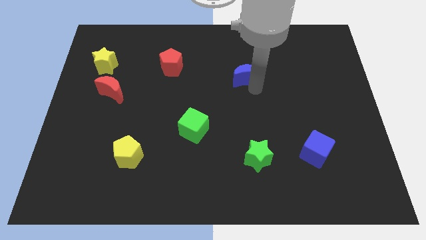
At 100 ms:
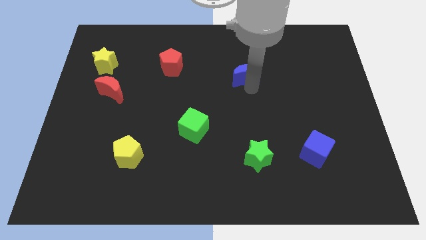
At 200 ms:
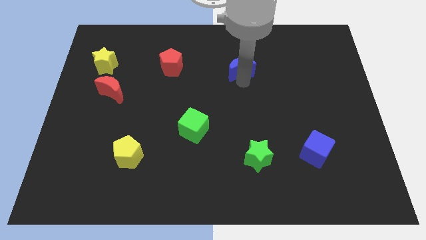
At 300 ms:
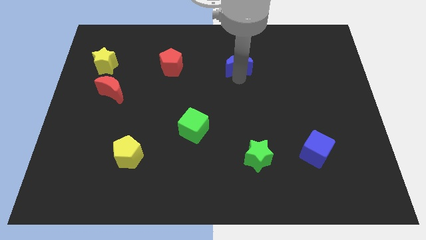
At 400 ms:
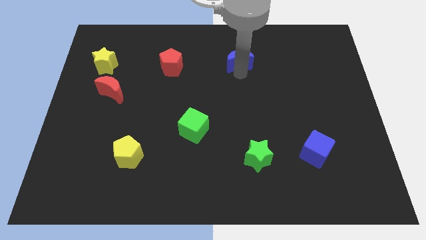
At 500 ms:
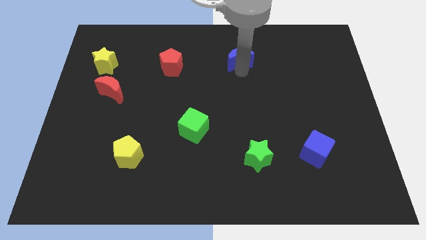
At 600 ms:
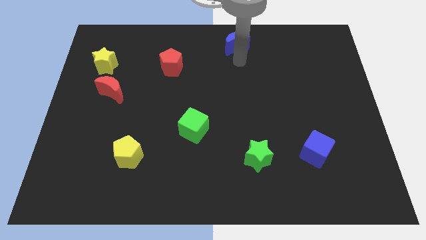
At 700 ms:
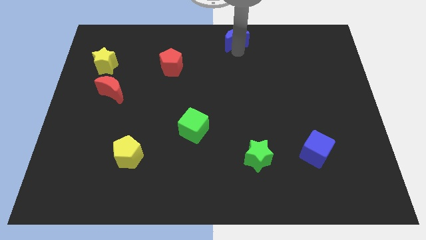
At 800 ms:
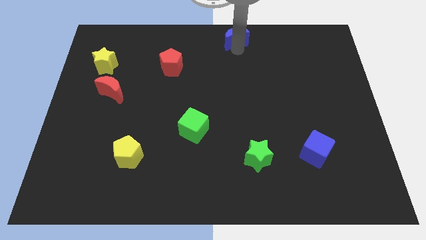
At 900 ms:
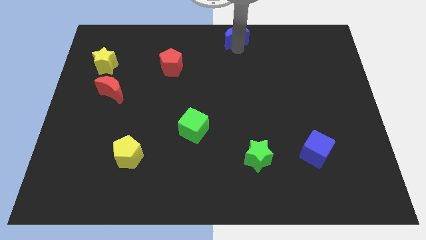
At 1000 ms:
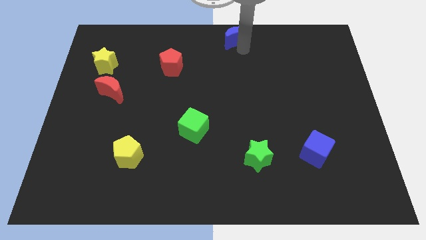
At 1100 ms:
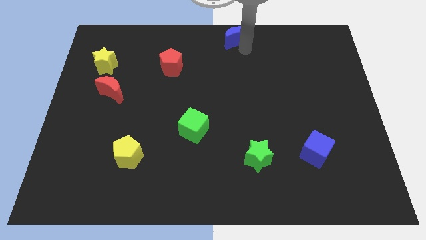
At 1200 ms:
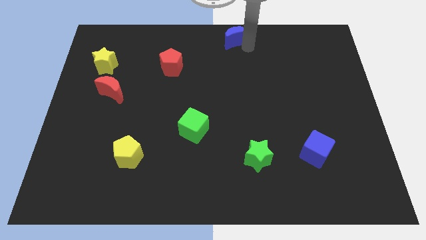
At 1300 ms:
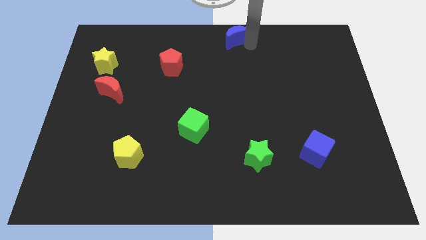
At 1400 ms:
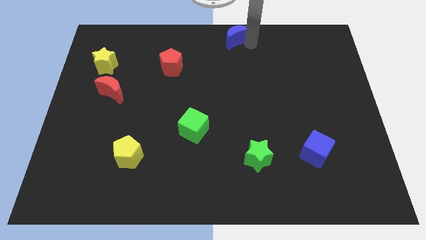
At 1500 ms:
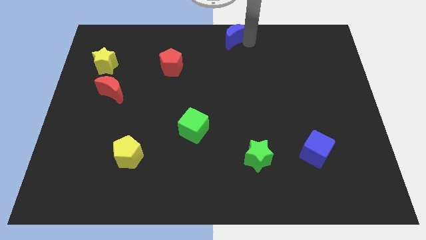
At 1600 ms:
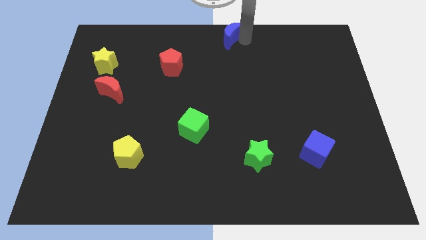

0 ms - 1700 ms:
push the blue moon to the top side of the table

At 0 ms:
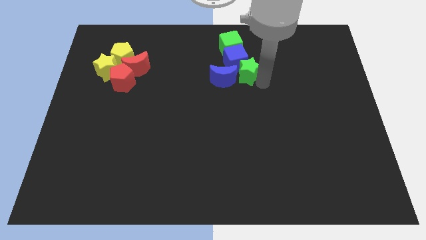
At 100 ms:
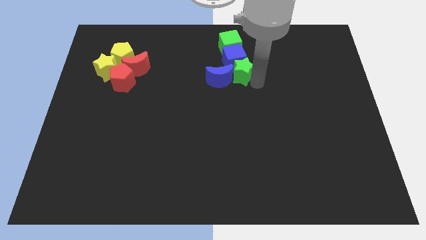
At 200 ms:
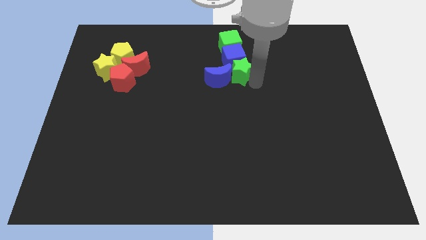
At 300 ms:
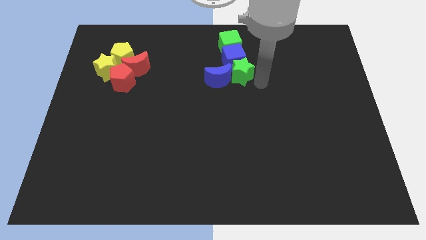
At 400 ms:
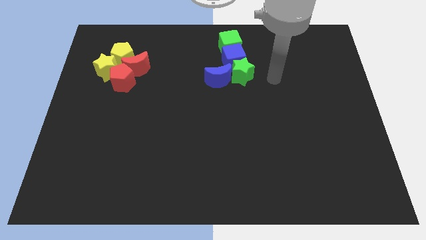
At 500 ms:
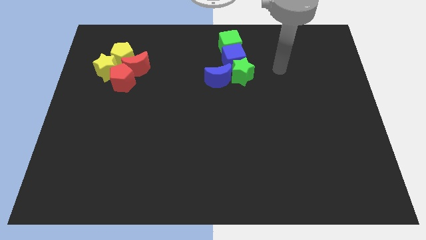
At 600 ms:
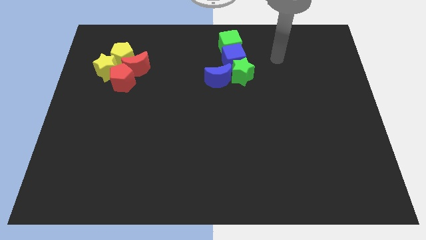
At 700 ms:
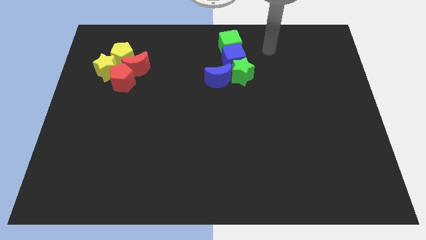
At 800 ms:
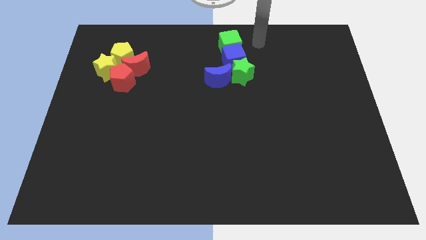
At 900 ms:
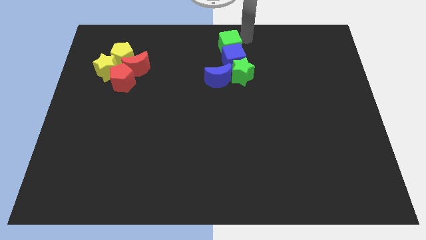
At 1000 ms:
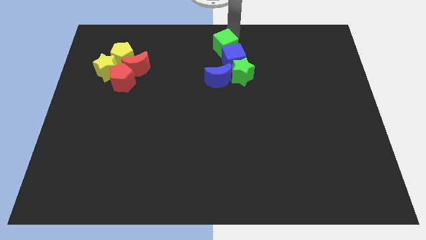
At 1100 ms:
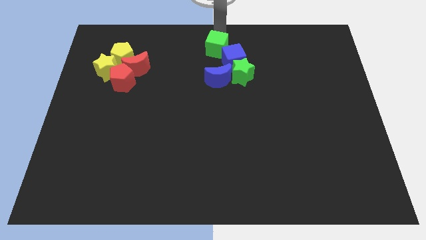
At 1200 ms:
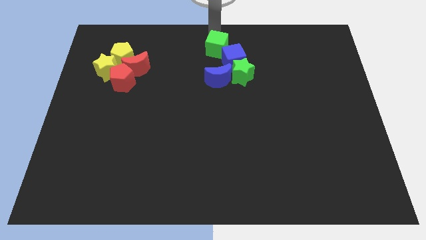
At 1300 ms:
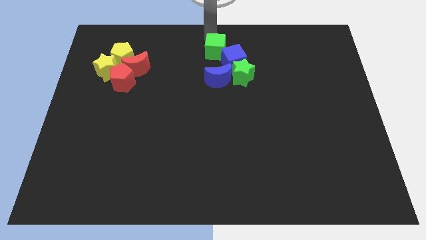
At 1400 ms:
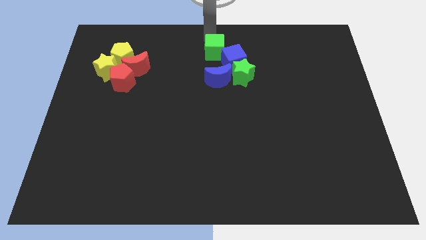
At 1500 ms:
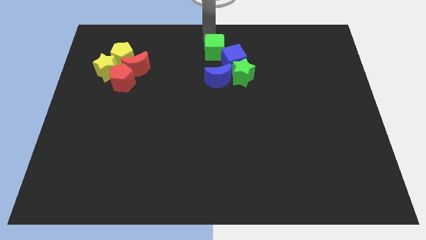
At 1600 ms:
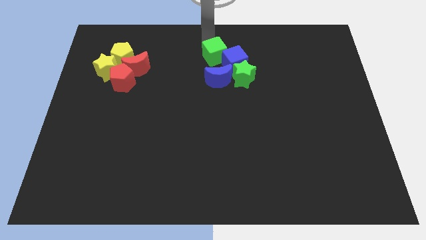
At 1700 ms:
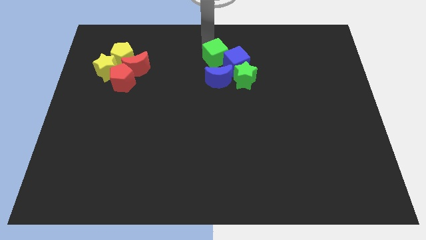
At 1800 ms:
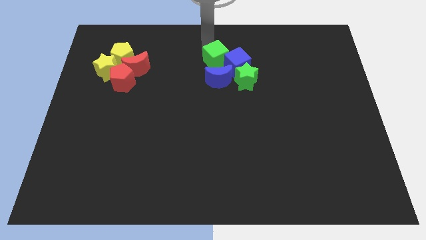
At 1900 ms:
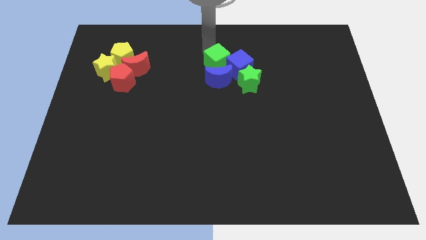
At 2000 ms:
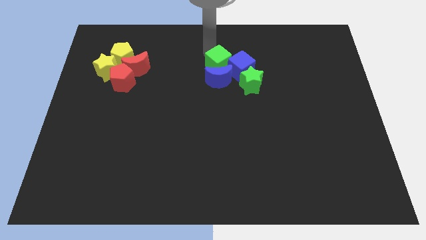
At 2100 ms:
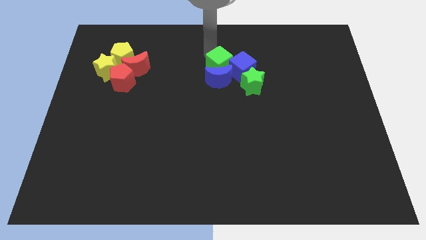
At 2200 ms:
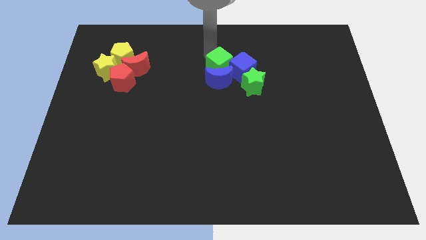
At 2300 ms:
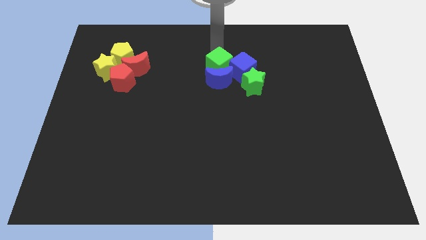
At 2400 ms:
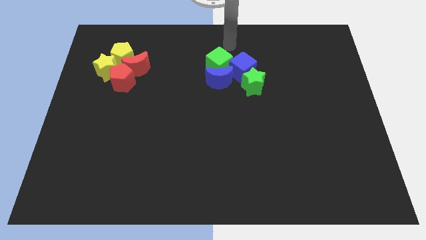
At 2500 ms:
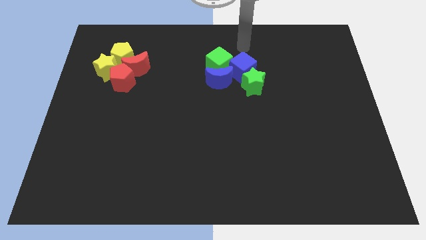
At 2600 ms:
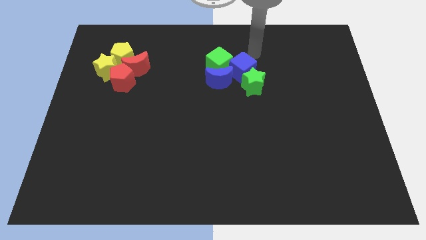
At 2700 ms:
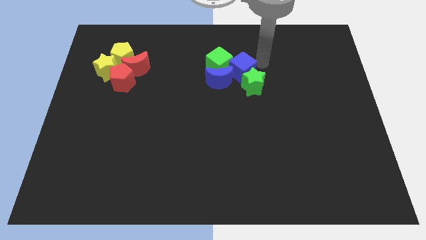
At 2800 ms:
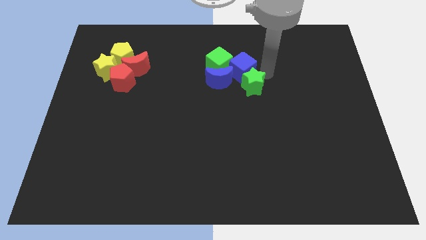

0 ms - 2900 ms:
push the green cube into the blue moon

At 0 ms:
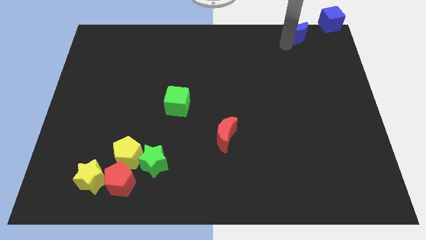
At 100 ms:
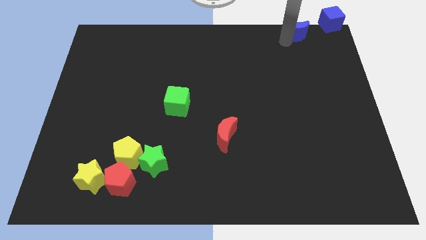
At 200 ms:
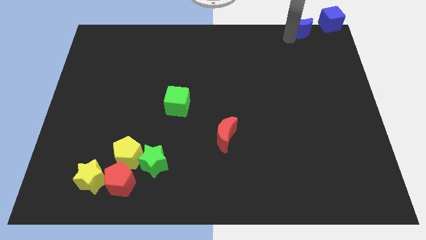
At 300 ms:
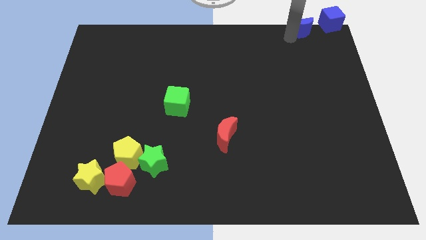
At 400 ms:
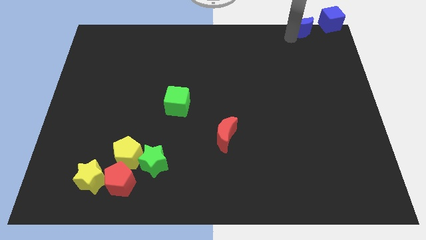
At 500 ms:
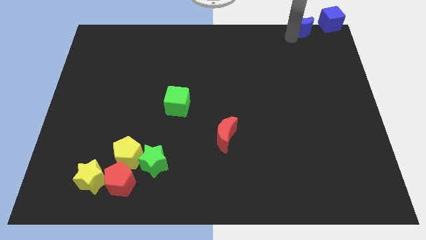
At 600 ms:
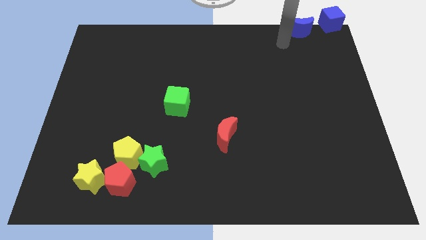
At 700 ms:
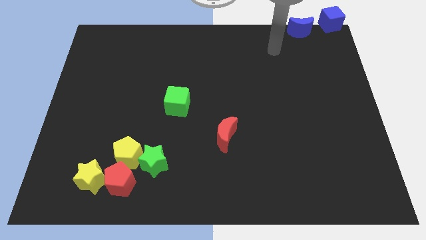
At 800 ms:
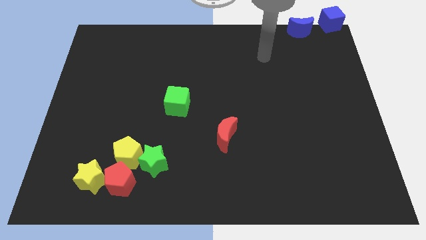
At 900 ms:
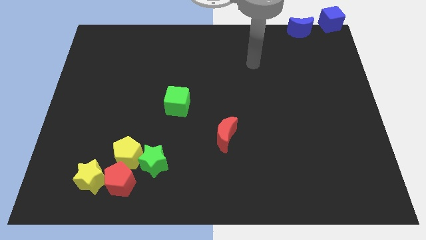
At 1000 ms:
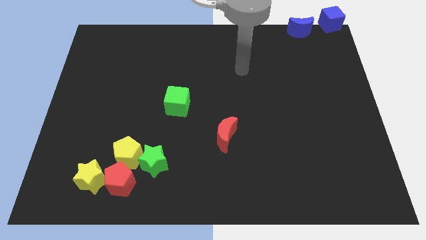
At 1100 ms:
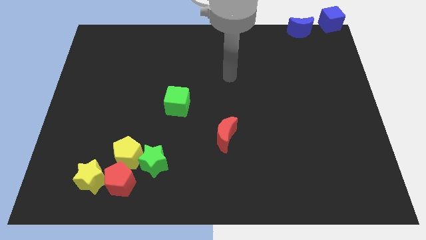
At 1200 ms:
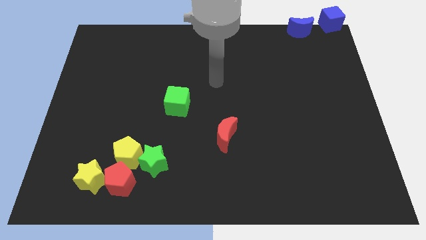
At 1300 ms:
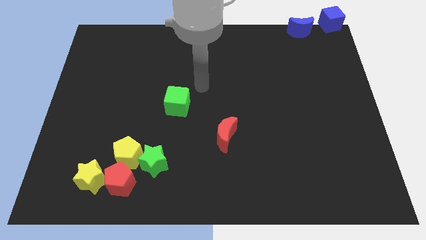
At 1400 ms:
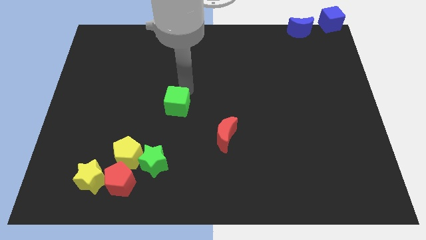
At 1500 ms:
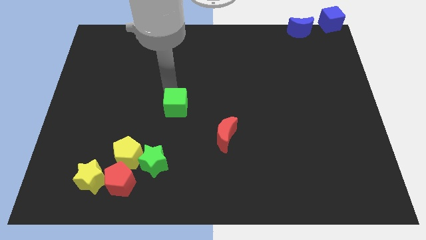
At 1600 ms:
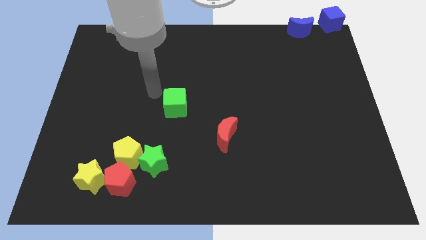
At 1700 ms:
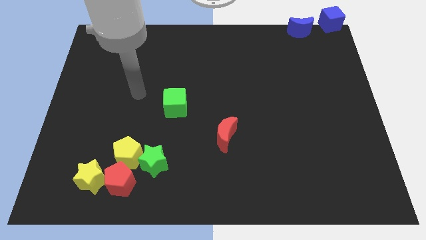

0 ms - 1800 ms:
push the blue crescent close to the blue cube

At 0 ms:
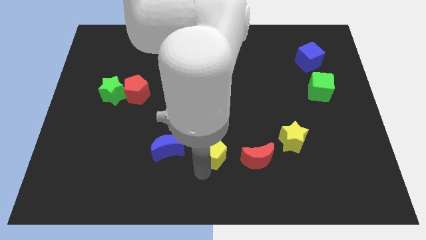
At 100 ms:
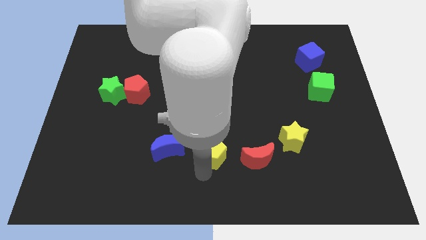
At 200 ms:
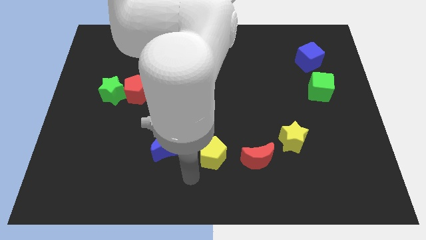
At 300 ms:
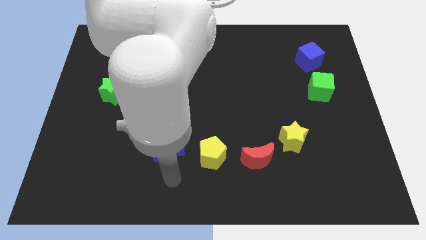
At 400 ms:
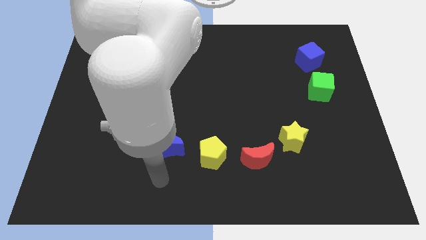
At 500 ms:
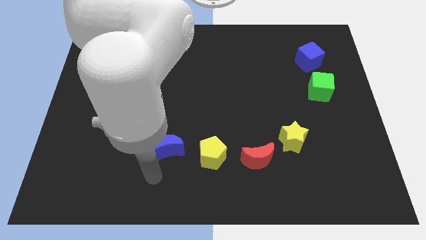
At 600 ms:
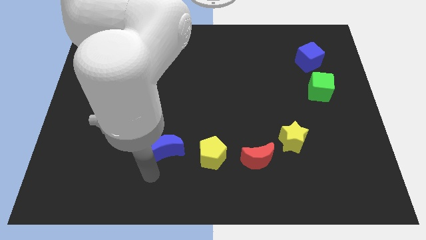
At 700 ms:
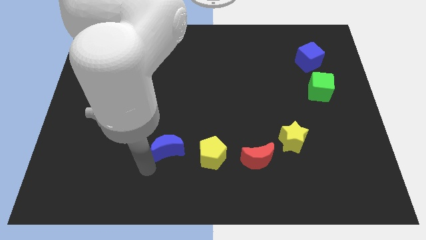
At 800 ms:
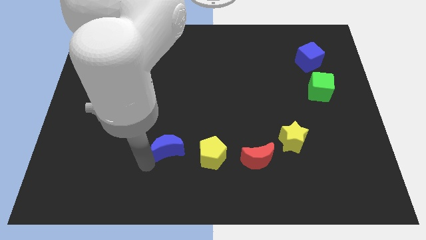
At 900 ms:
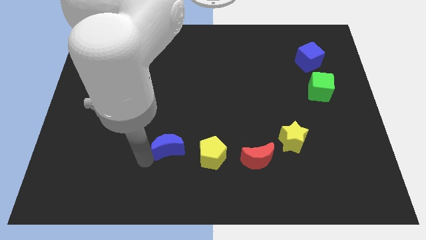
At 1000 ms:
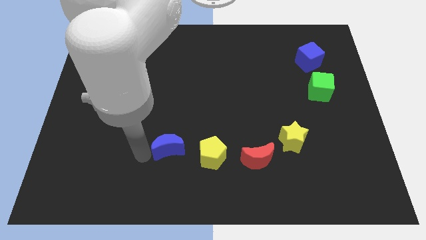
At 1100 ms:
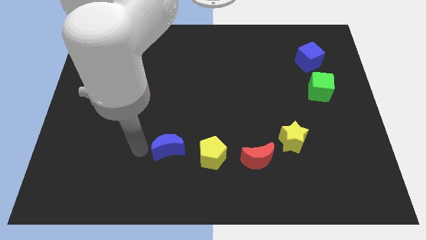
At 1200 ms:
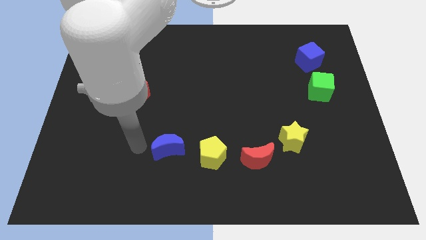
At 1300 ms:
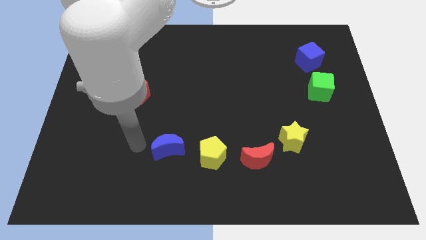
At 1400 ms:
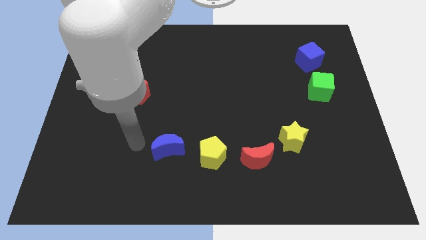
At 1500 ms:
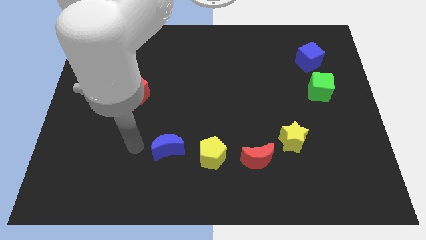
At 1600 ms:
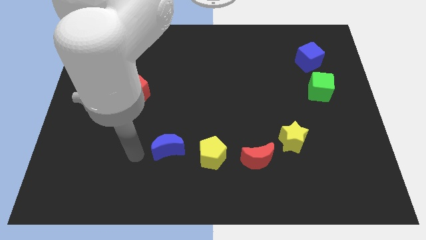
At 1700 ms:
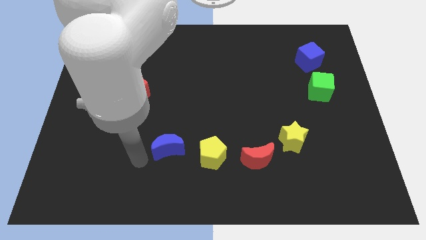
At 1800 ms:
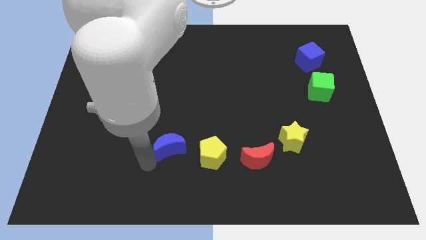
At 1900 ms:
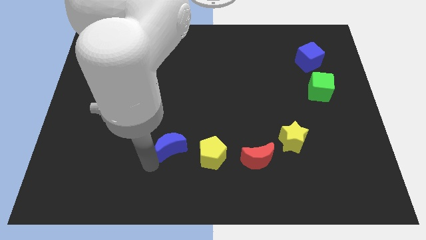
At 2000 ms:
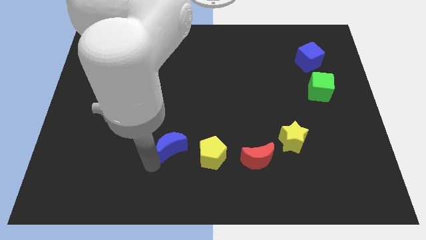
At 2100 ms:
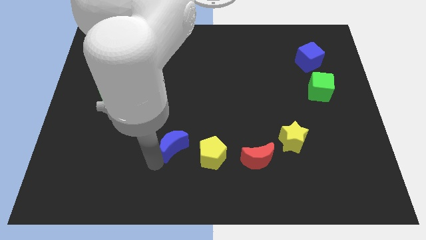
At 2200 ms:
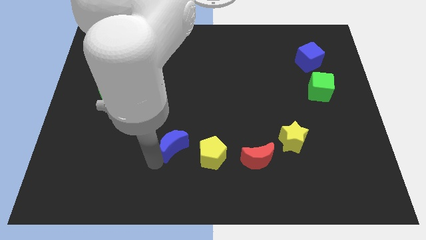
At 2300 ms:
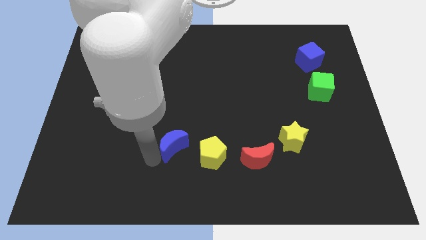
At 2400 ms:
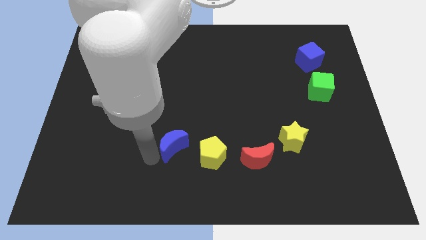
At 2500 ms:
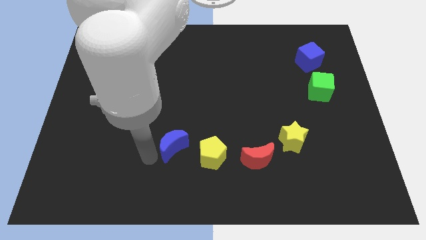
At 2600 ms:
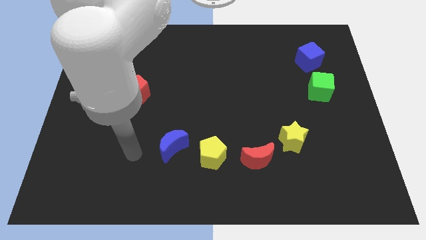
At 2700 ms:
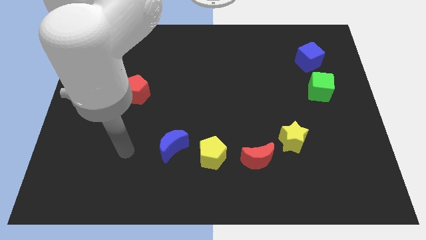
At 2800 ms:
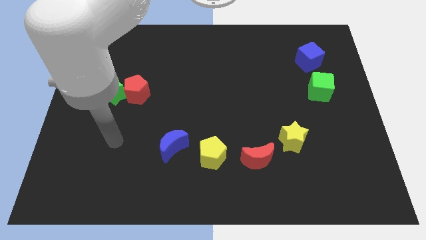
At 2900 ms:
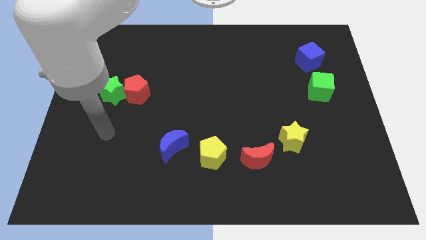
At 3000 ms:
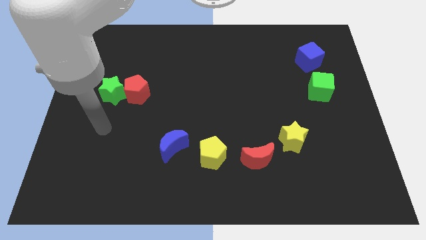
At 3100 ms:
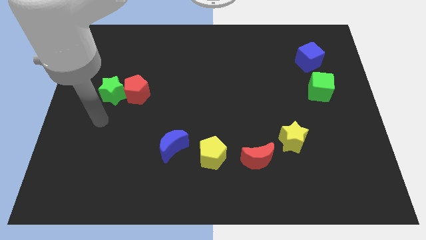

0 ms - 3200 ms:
slide blue moon to the left of yellow pentagon
